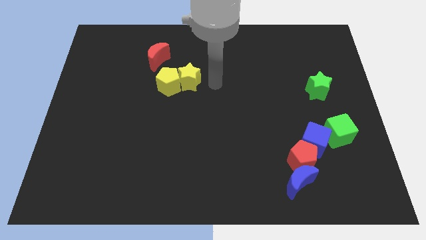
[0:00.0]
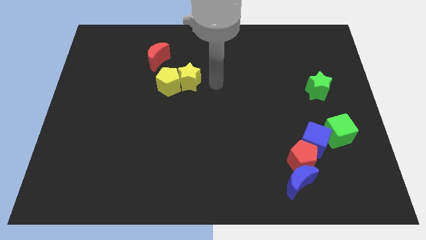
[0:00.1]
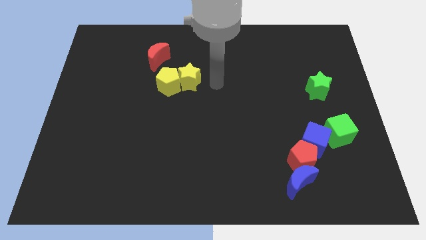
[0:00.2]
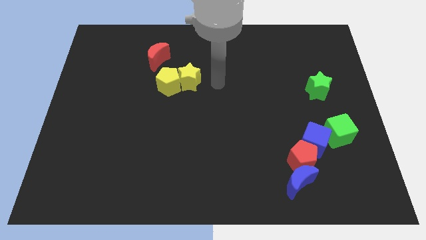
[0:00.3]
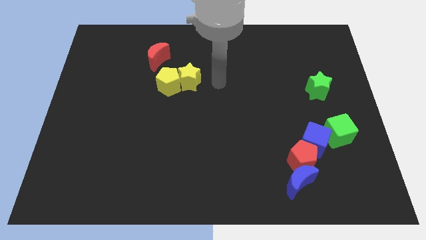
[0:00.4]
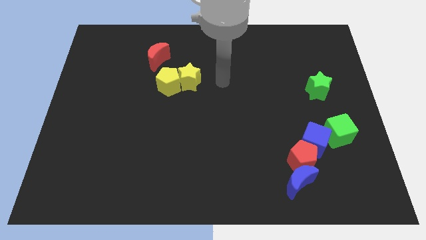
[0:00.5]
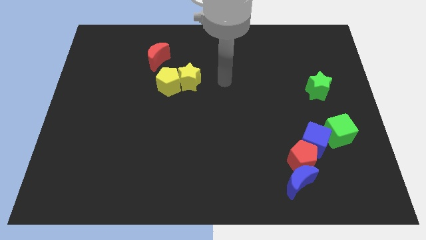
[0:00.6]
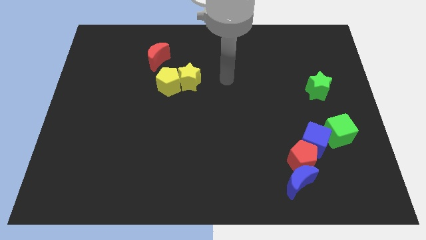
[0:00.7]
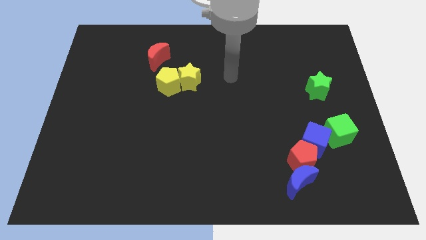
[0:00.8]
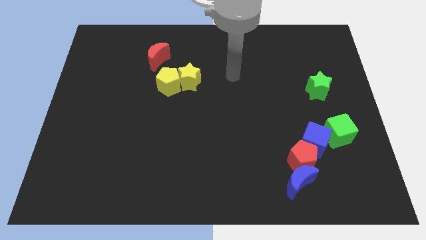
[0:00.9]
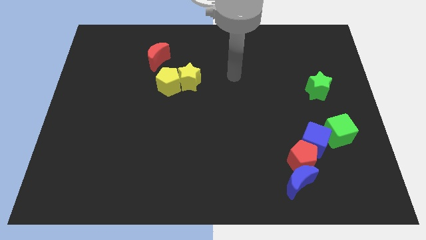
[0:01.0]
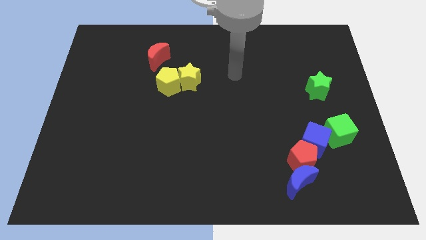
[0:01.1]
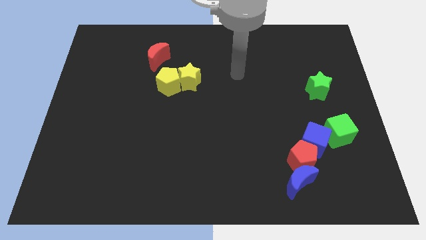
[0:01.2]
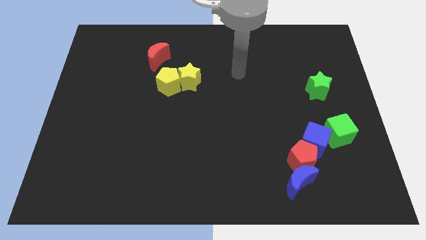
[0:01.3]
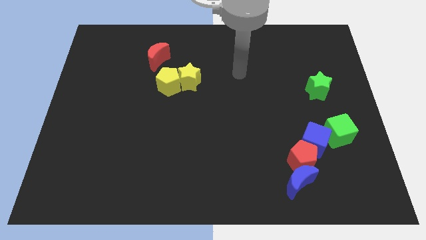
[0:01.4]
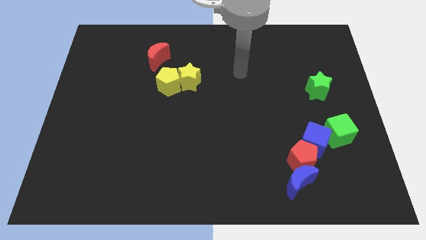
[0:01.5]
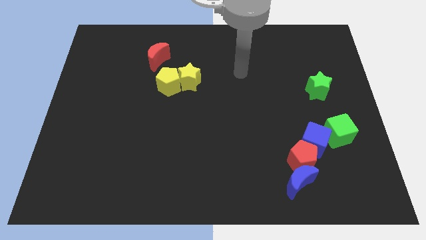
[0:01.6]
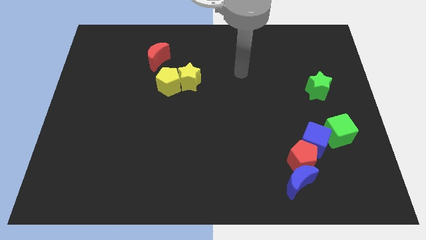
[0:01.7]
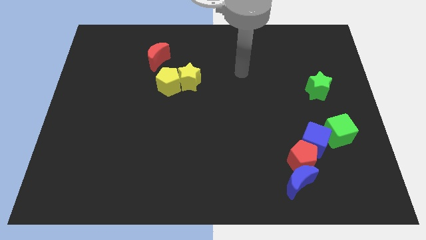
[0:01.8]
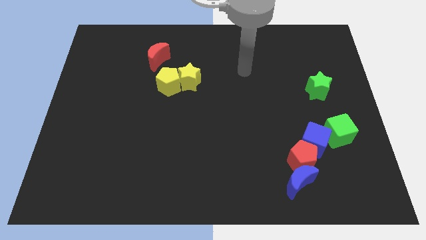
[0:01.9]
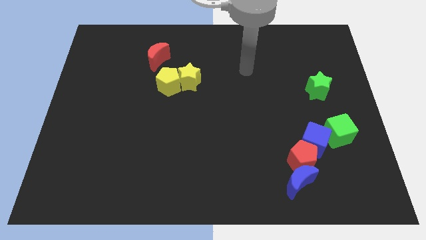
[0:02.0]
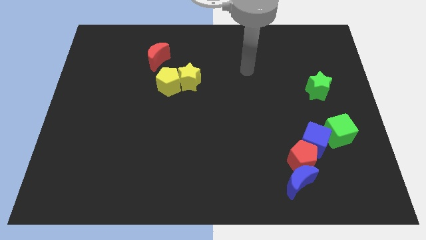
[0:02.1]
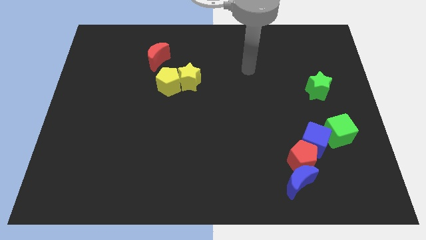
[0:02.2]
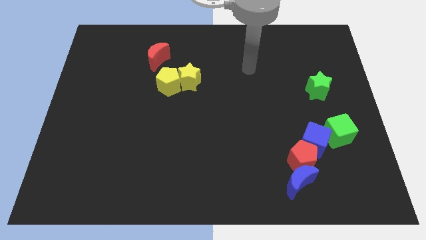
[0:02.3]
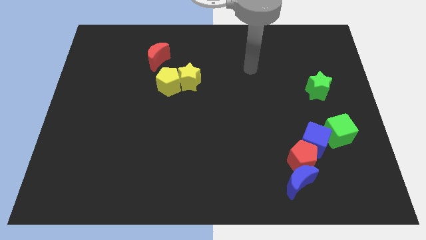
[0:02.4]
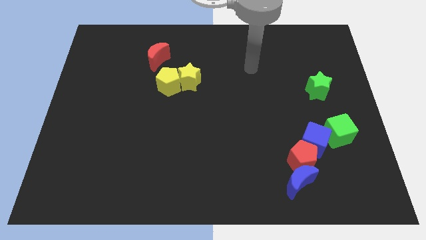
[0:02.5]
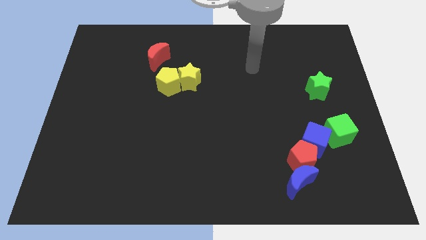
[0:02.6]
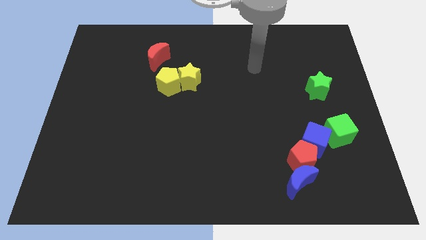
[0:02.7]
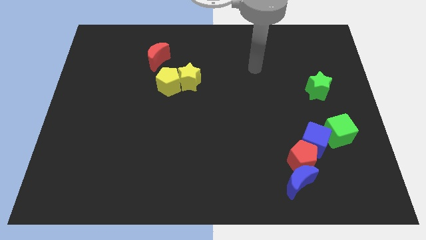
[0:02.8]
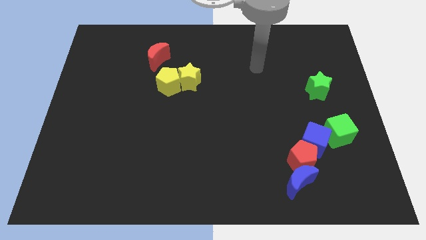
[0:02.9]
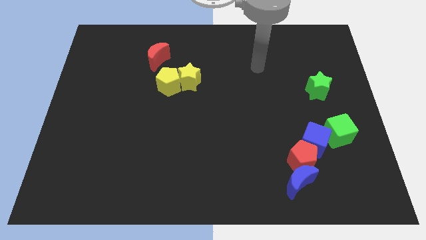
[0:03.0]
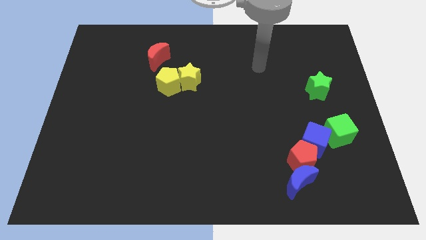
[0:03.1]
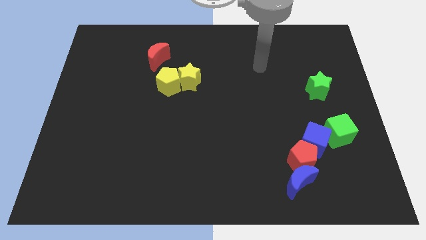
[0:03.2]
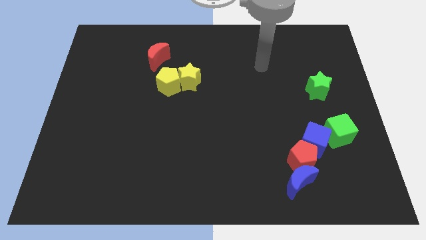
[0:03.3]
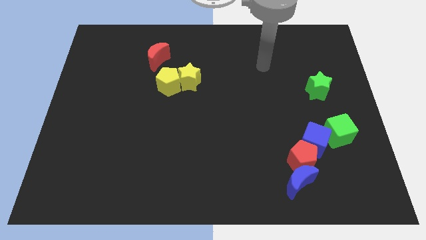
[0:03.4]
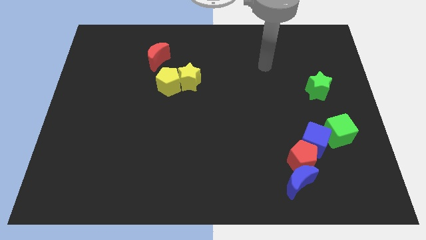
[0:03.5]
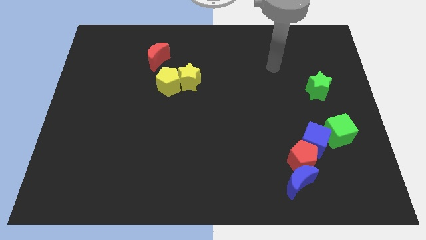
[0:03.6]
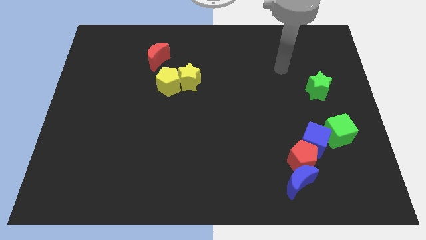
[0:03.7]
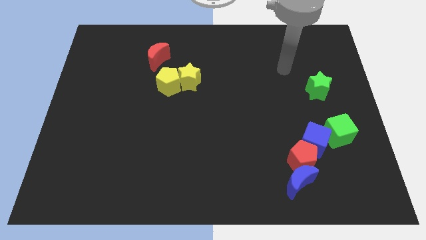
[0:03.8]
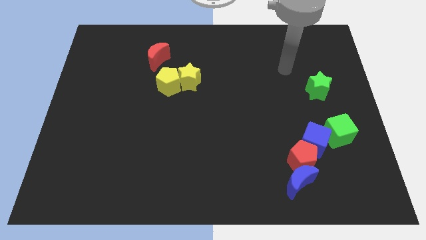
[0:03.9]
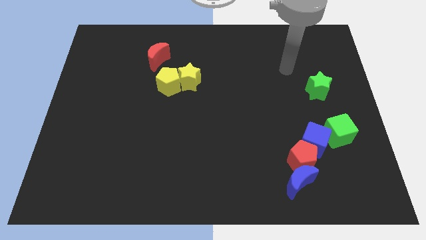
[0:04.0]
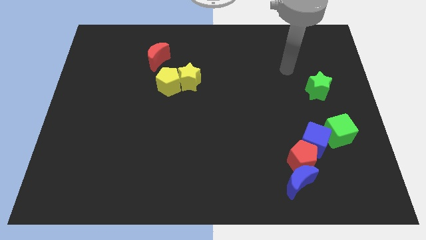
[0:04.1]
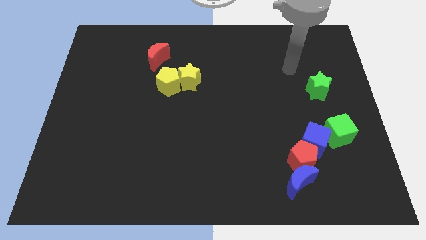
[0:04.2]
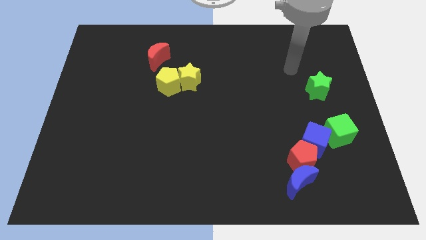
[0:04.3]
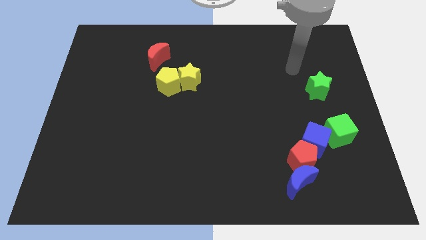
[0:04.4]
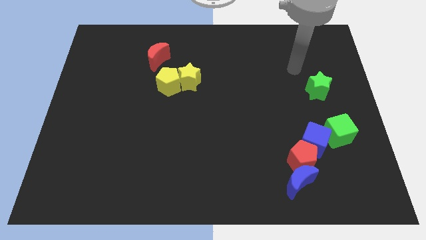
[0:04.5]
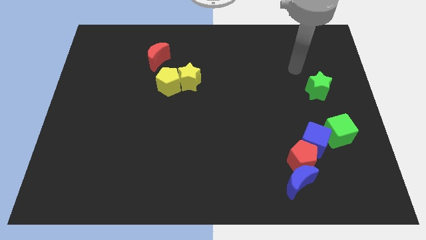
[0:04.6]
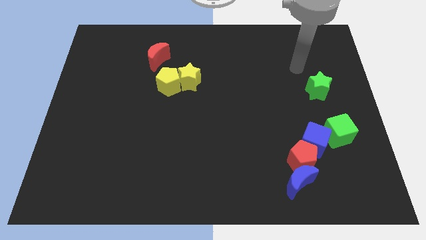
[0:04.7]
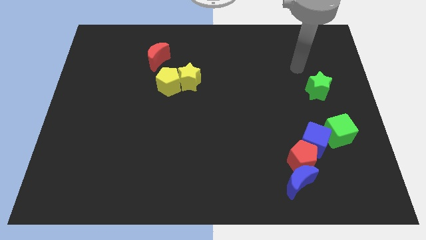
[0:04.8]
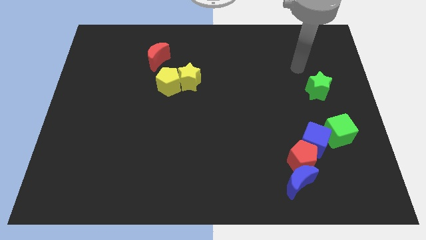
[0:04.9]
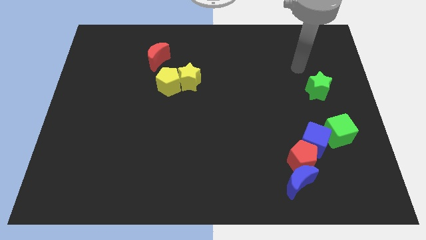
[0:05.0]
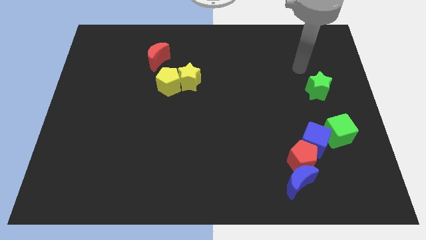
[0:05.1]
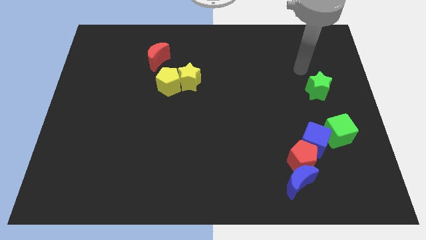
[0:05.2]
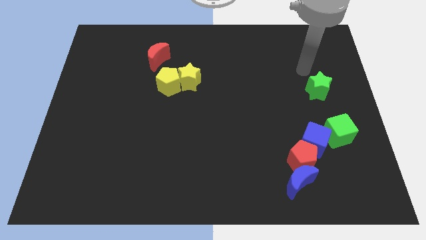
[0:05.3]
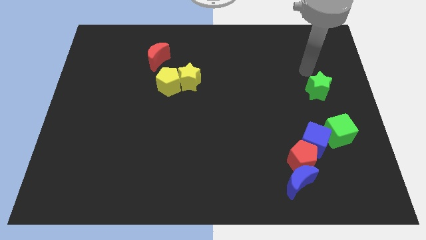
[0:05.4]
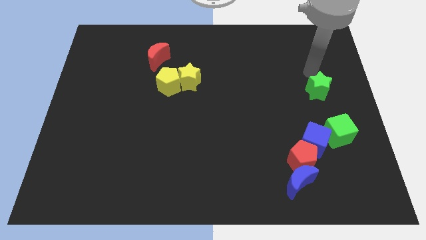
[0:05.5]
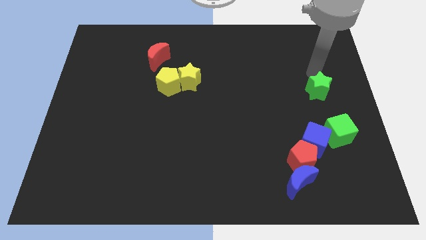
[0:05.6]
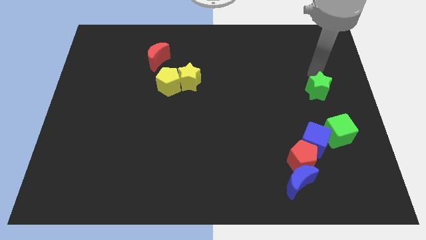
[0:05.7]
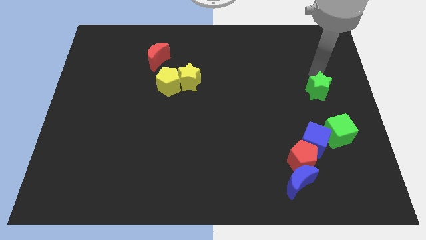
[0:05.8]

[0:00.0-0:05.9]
point your arm at the top of the green star

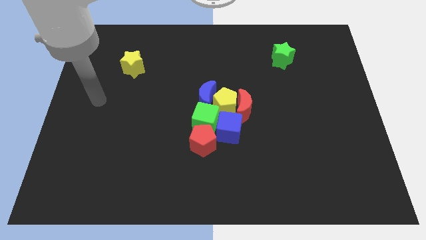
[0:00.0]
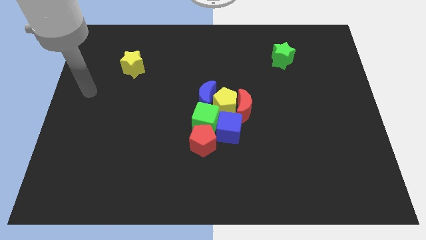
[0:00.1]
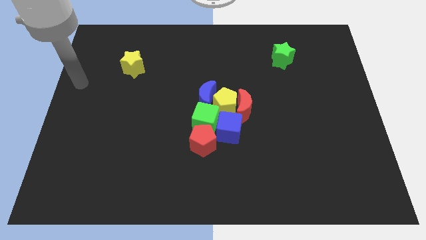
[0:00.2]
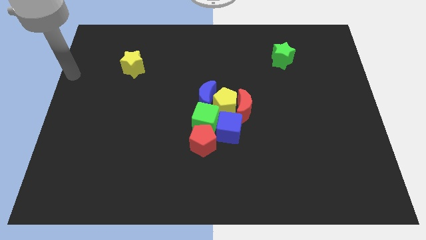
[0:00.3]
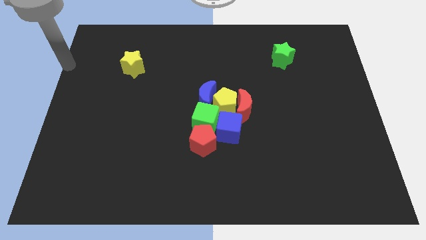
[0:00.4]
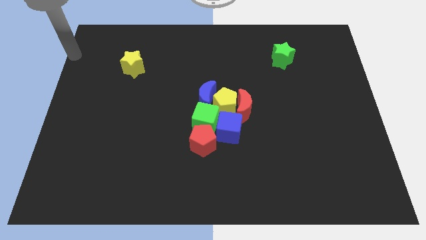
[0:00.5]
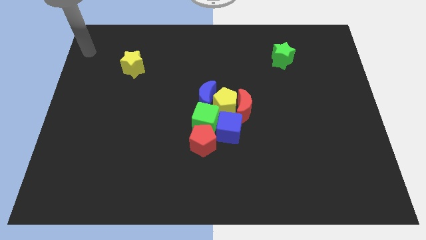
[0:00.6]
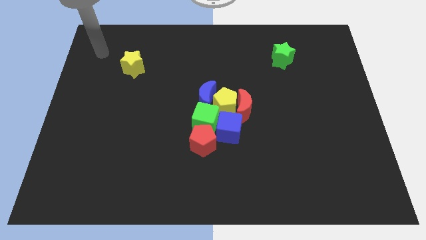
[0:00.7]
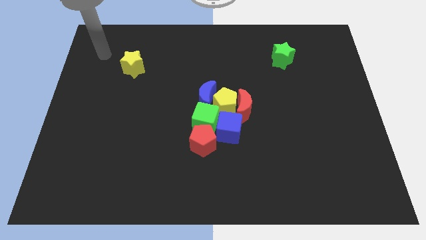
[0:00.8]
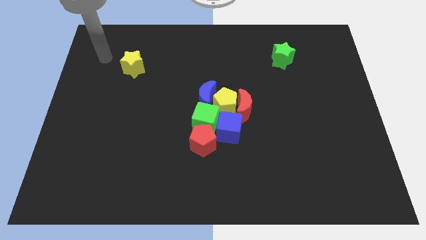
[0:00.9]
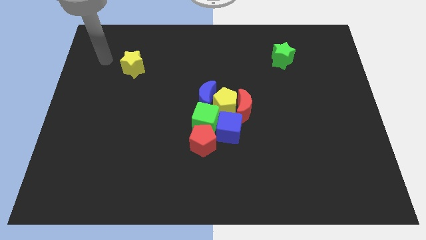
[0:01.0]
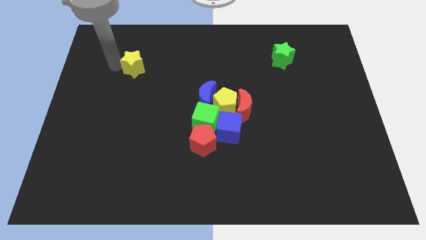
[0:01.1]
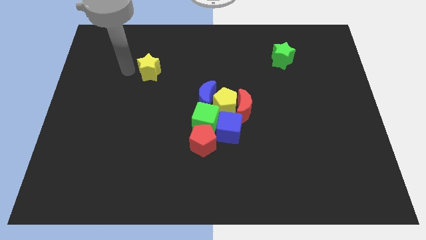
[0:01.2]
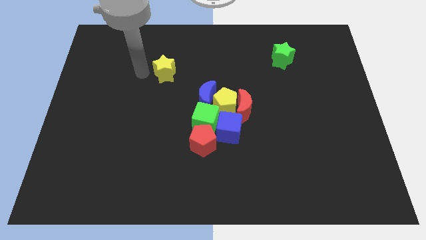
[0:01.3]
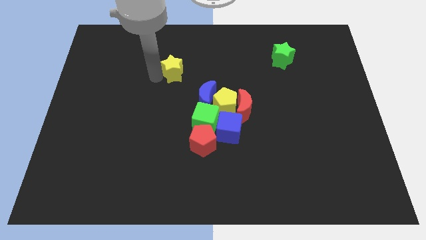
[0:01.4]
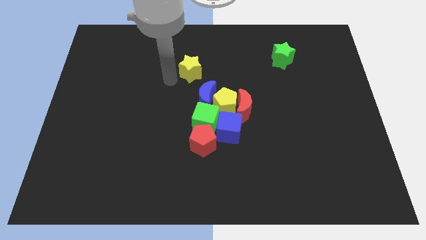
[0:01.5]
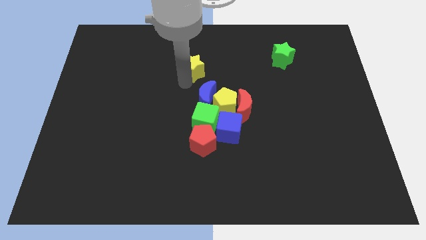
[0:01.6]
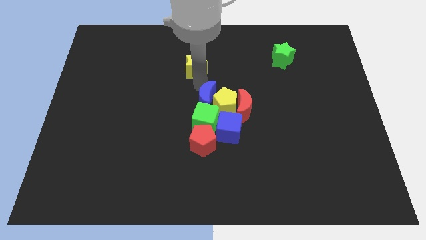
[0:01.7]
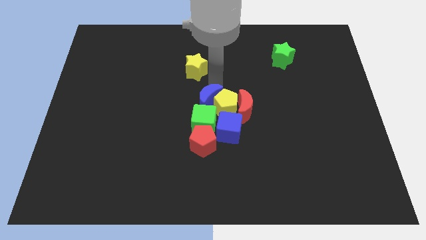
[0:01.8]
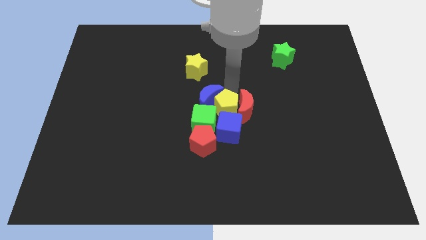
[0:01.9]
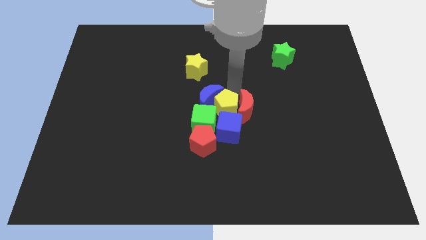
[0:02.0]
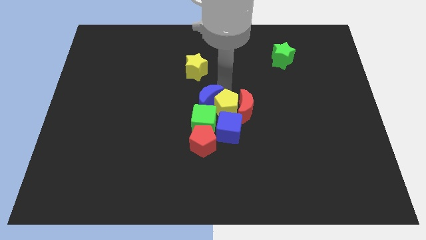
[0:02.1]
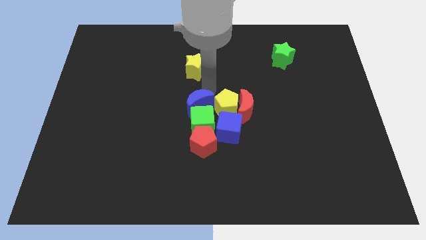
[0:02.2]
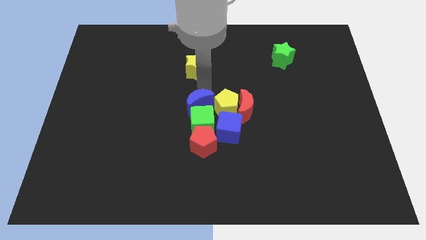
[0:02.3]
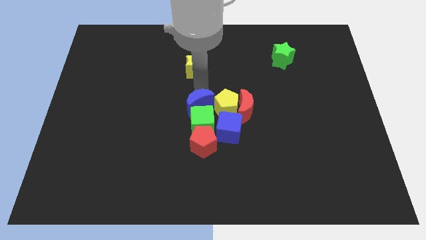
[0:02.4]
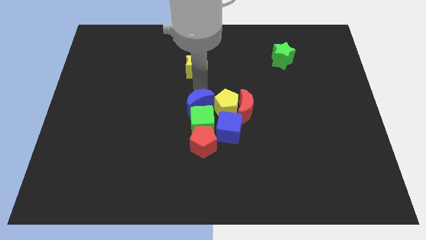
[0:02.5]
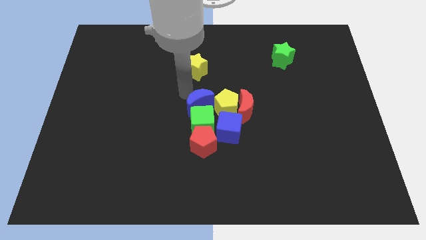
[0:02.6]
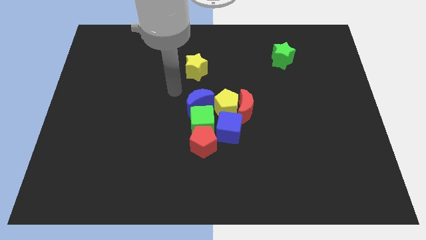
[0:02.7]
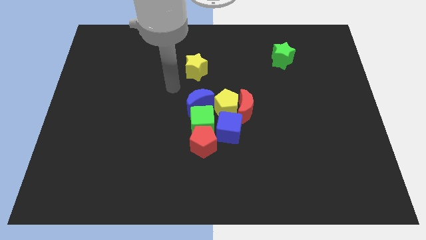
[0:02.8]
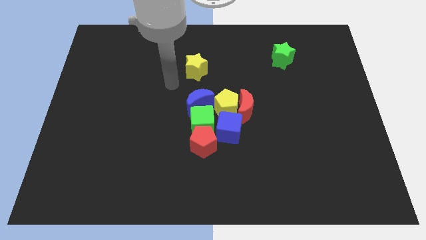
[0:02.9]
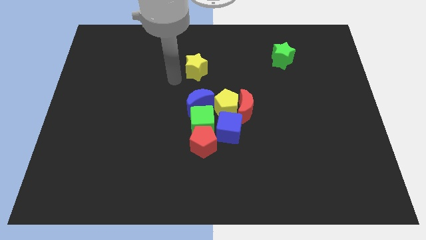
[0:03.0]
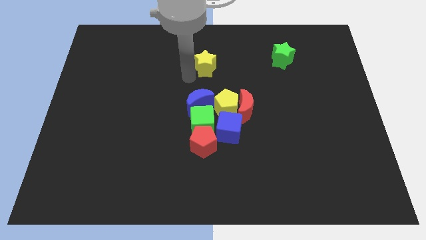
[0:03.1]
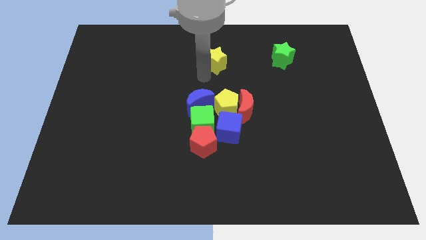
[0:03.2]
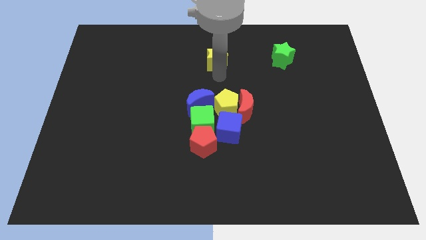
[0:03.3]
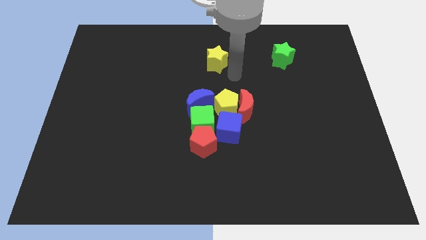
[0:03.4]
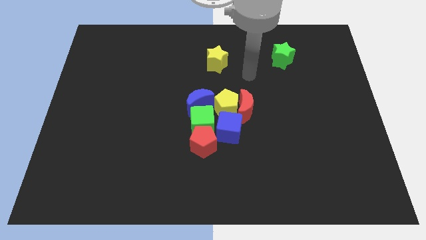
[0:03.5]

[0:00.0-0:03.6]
place the yellow star above the yellow pentagon
